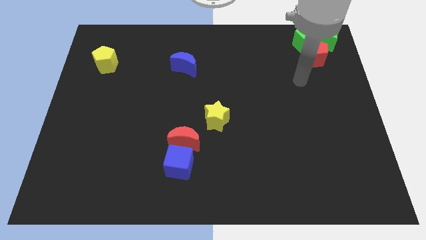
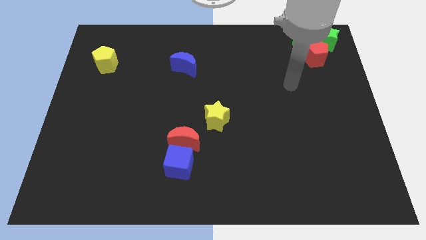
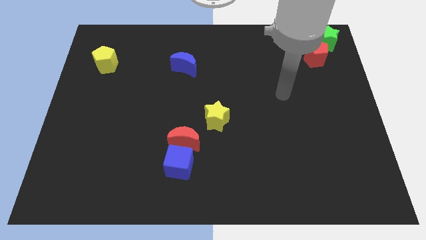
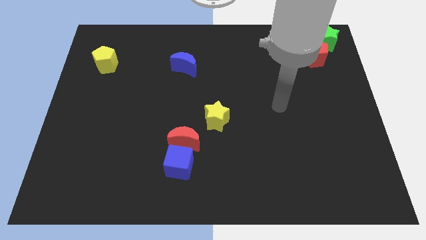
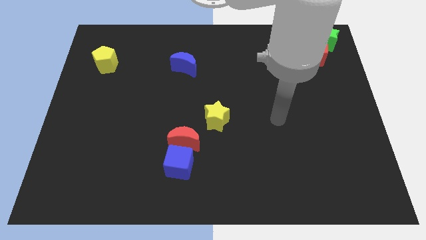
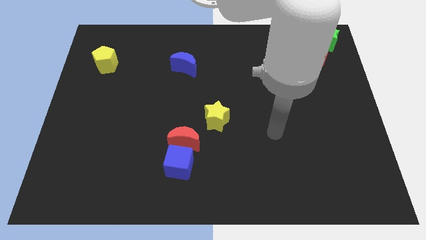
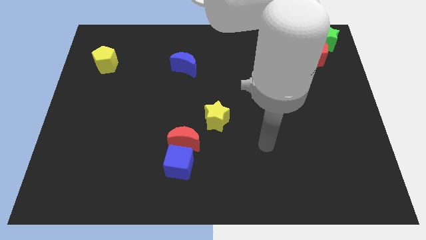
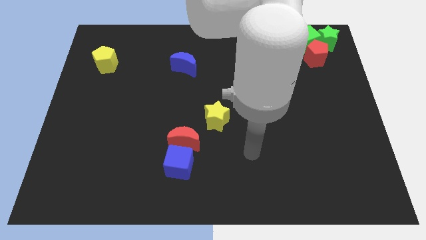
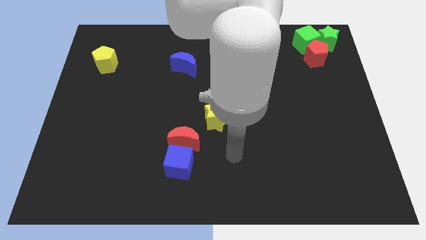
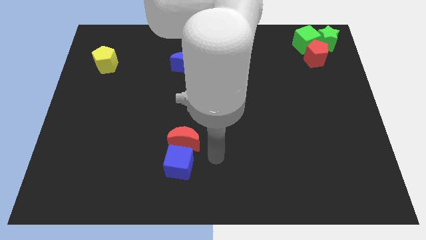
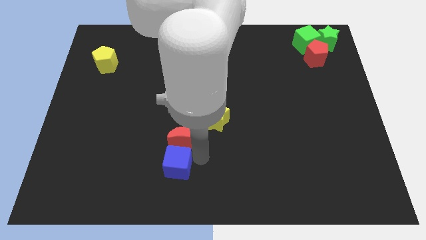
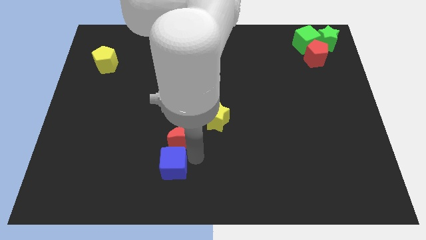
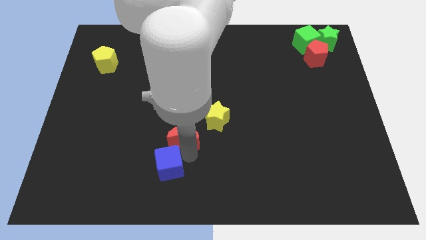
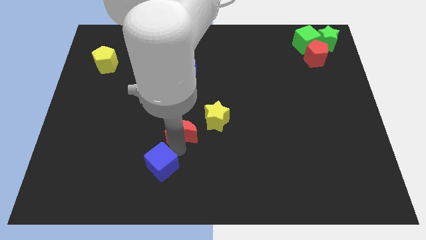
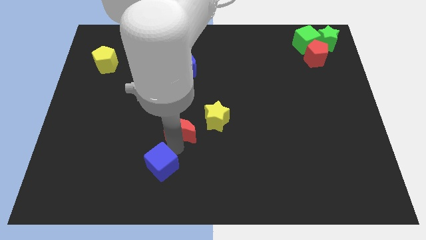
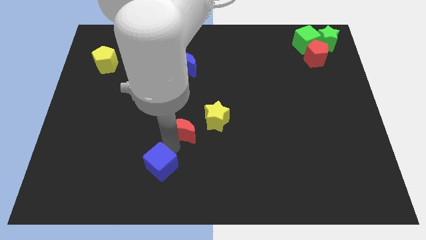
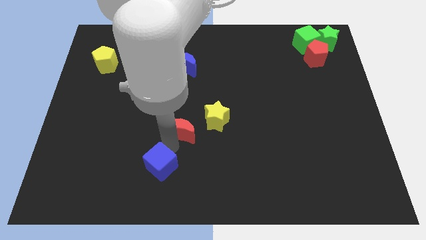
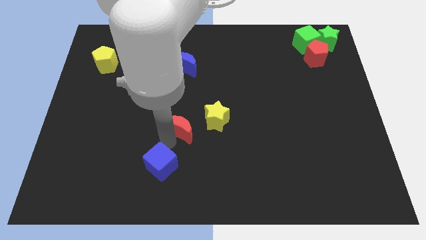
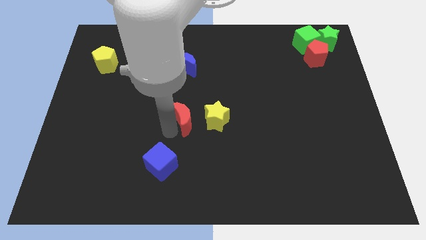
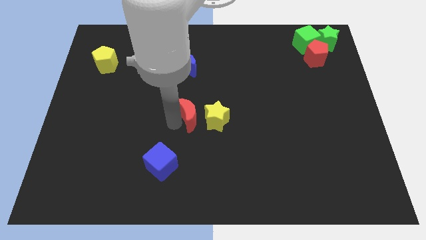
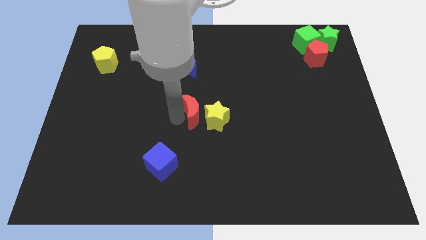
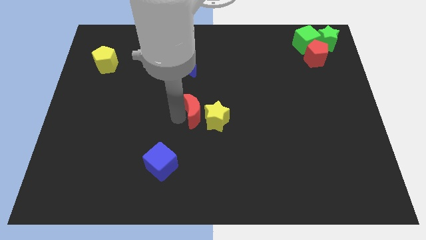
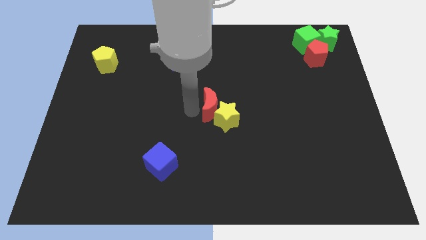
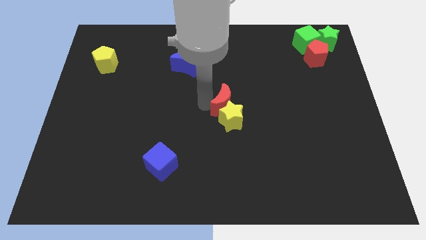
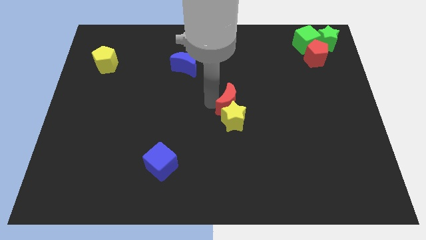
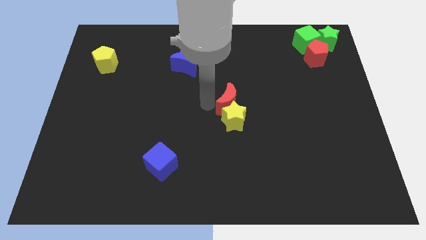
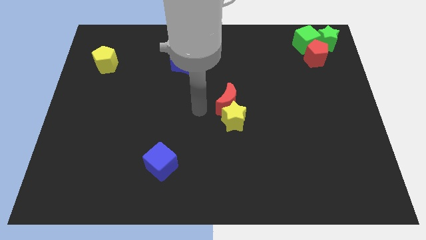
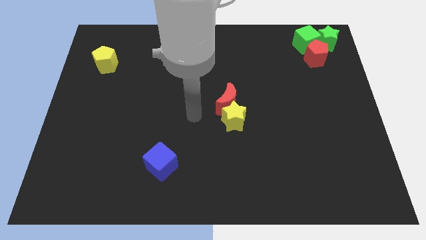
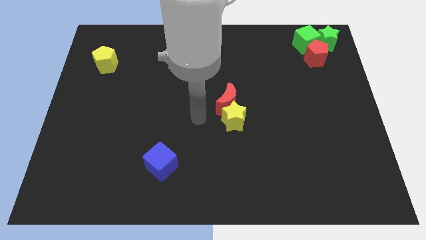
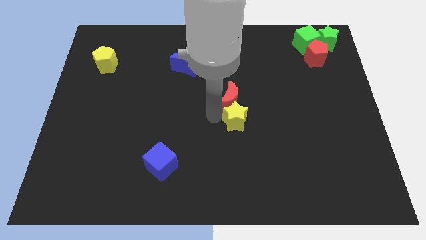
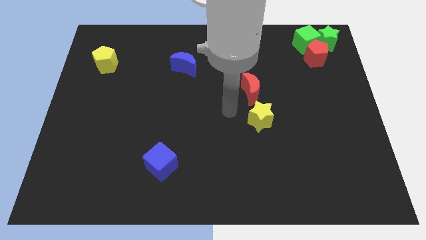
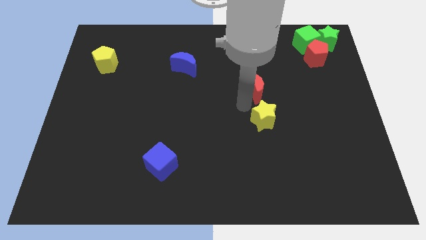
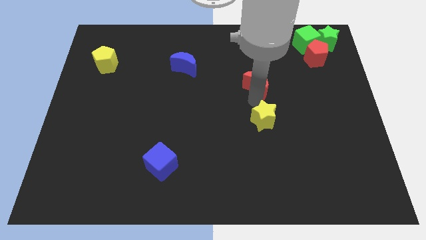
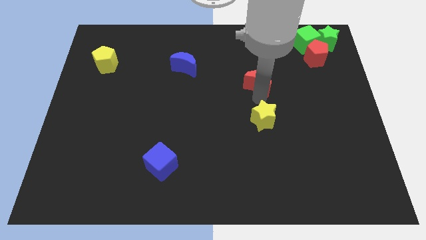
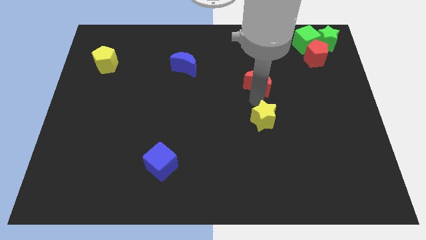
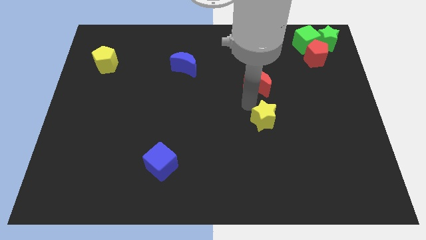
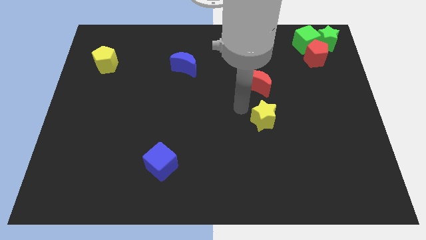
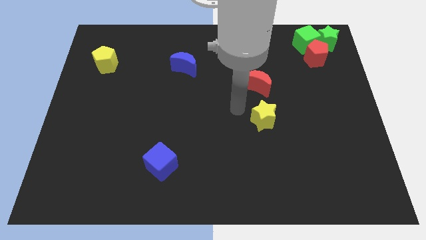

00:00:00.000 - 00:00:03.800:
place the red moon to the top of the yellow star

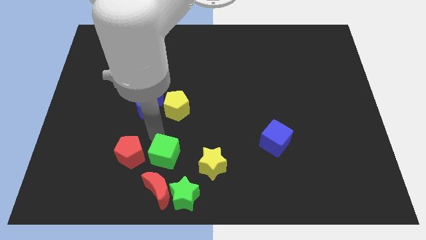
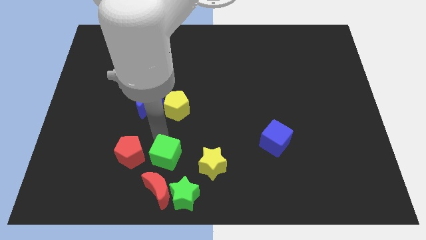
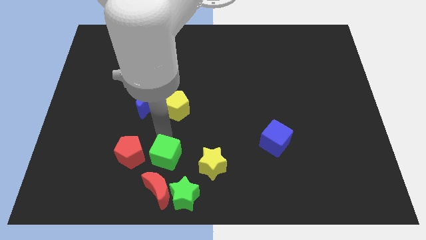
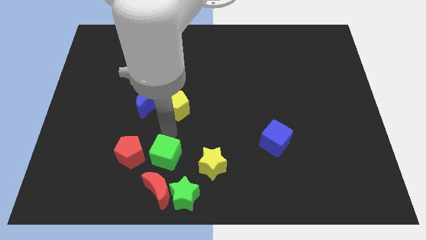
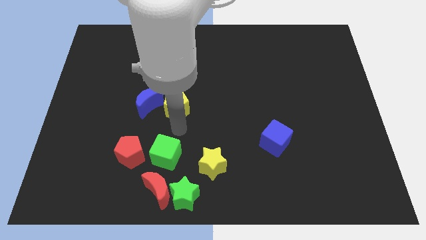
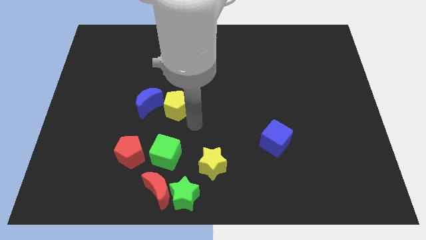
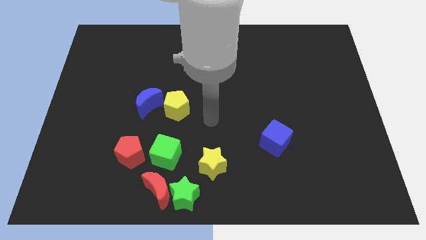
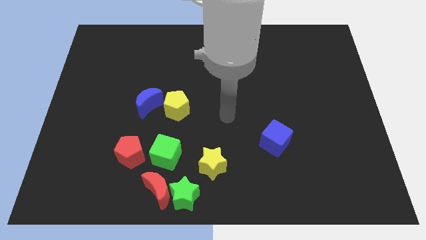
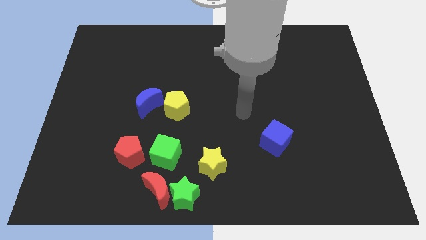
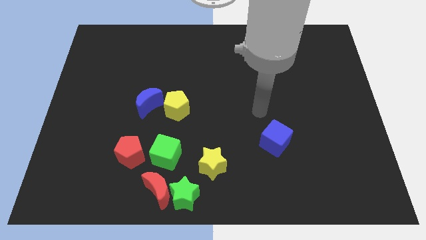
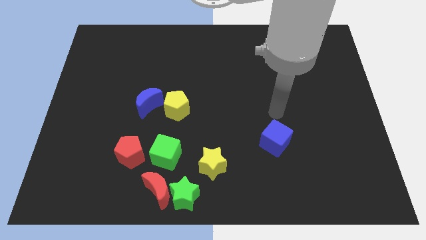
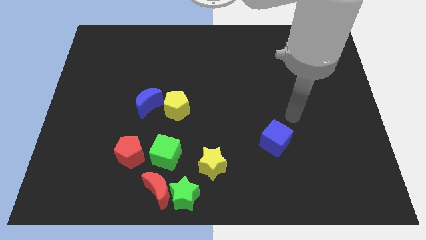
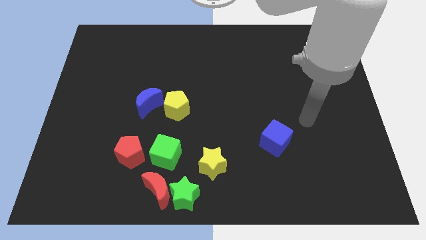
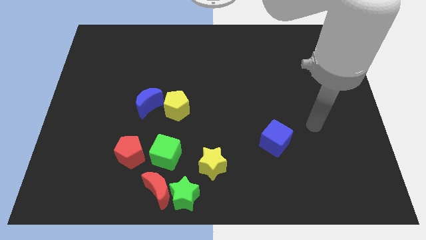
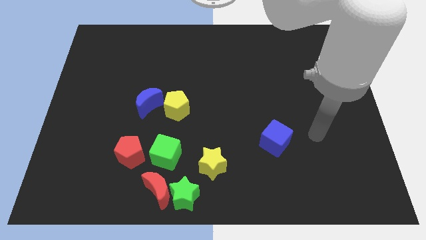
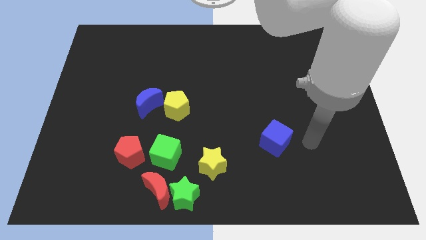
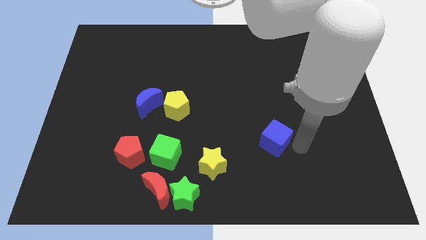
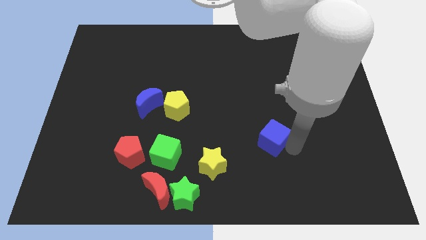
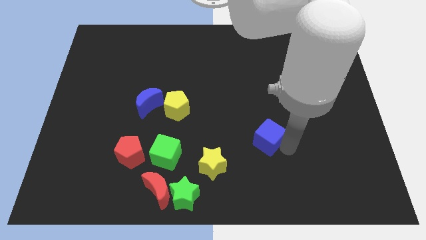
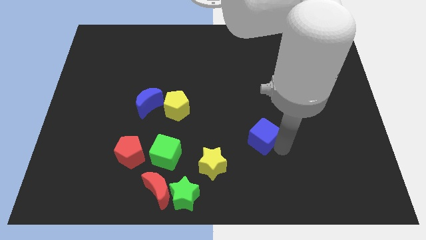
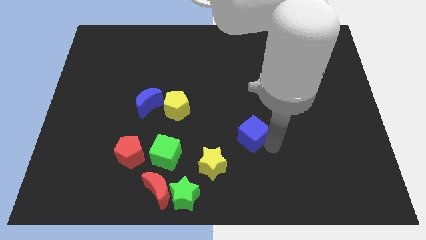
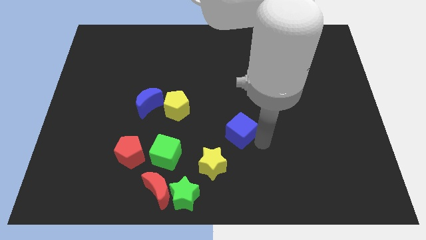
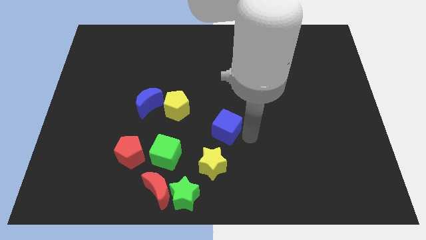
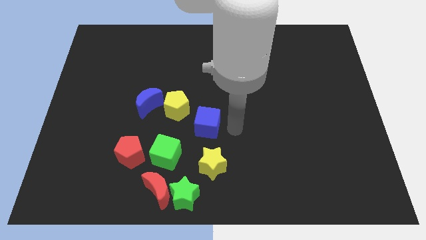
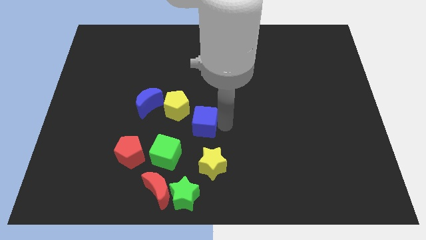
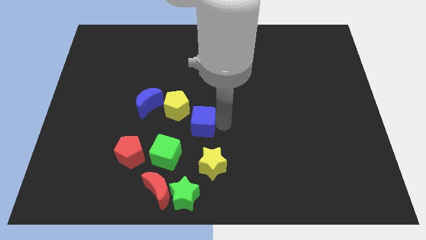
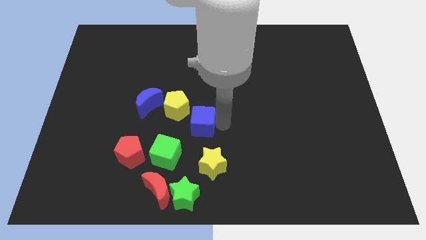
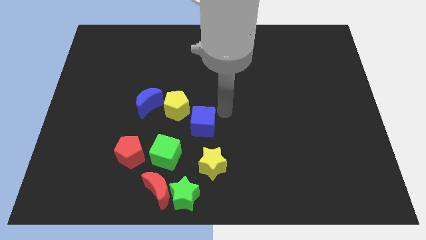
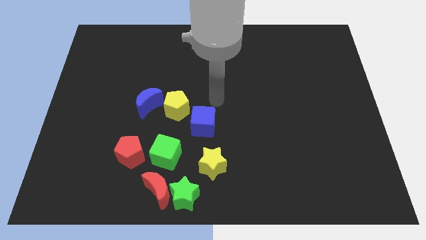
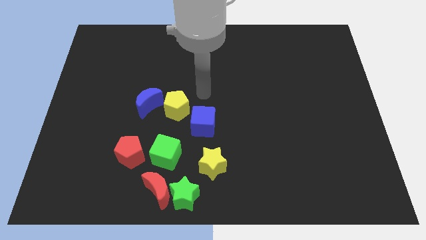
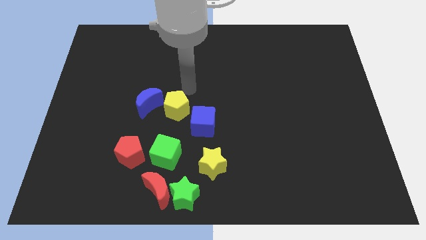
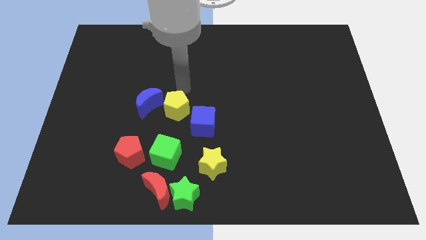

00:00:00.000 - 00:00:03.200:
place blue cube to the top right of green cube diagonally

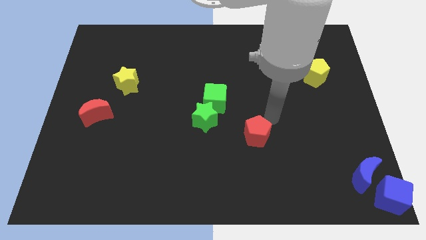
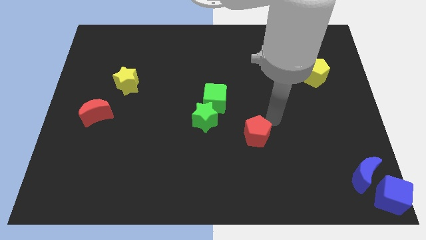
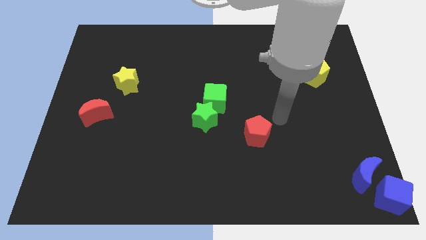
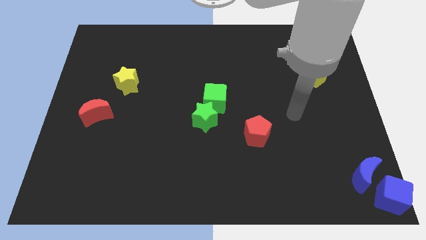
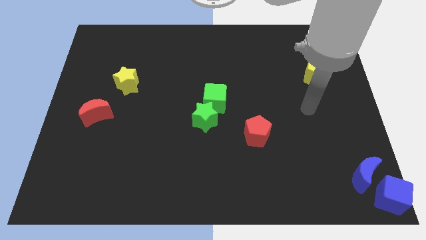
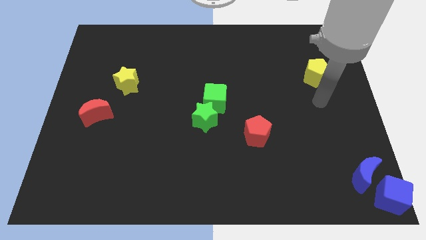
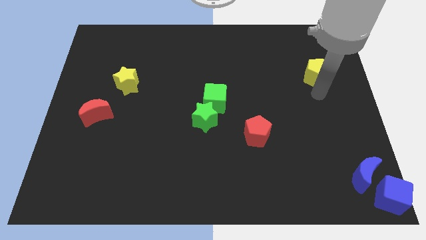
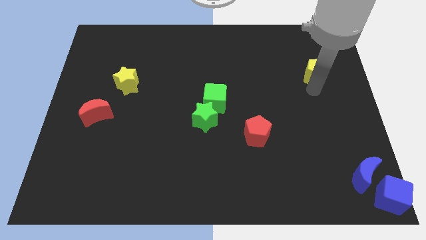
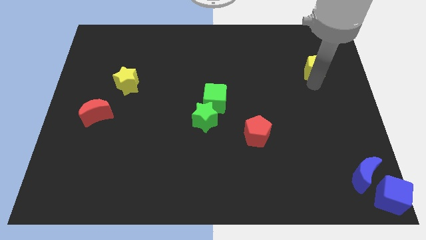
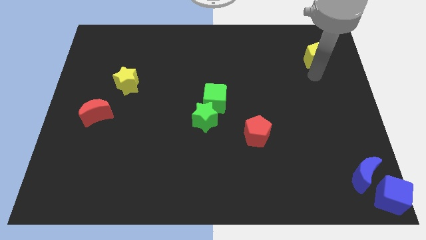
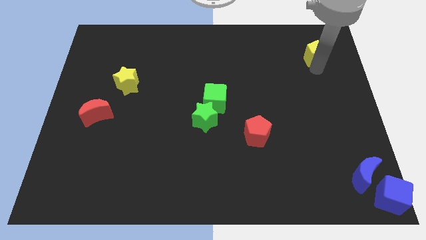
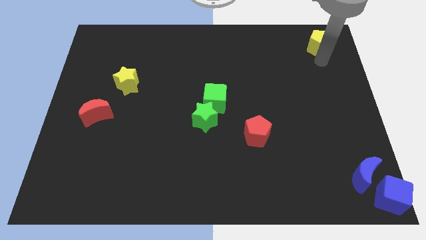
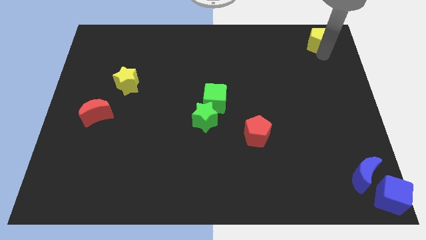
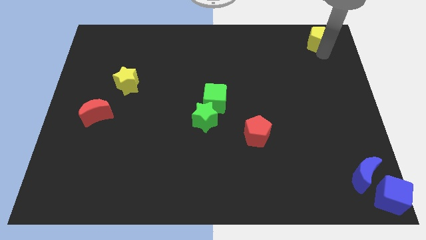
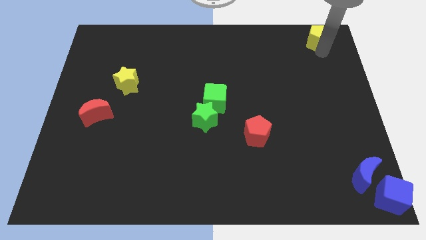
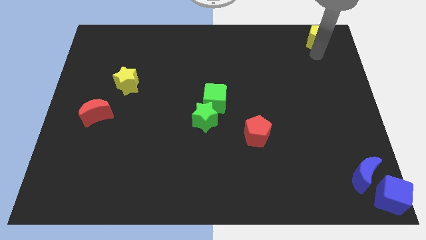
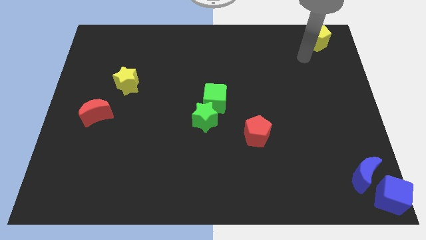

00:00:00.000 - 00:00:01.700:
move yellow pentagon to the top right corner of the board

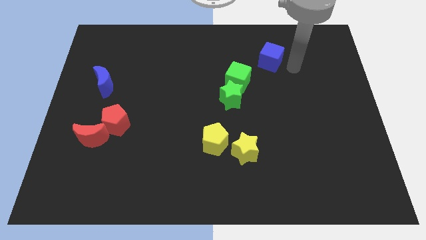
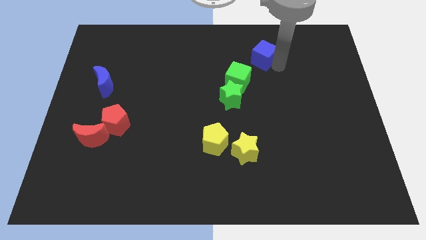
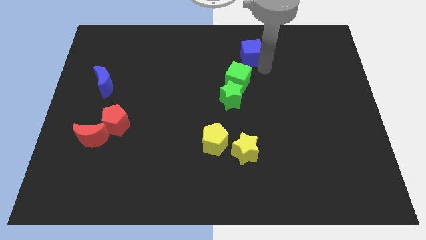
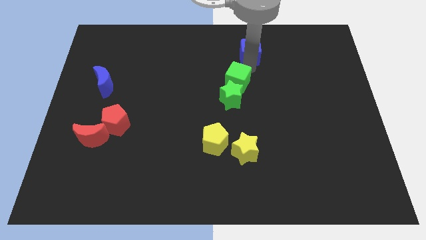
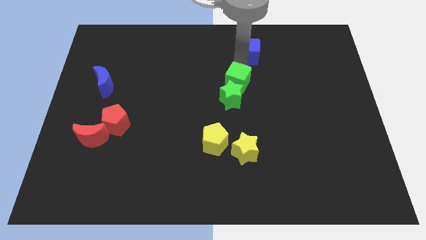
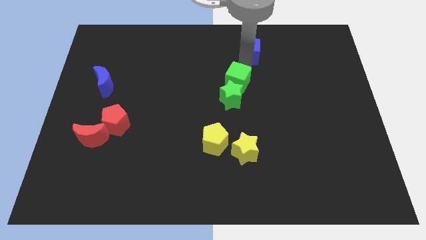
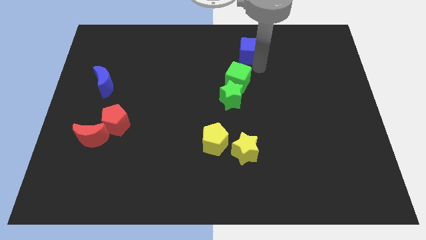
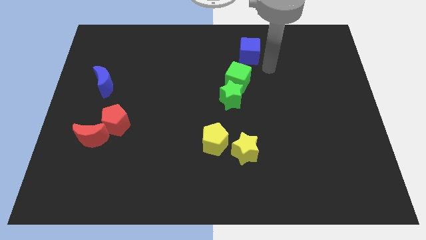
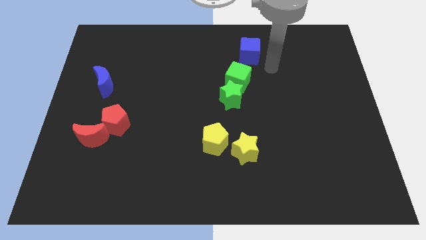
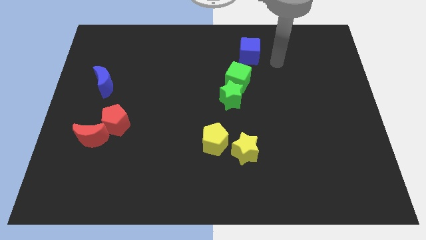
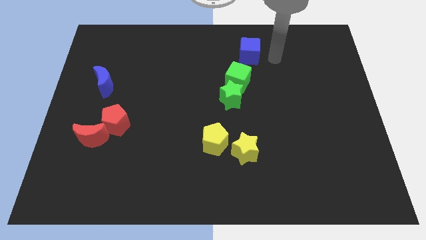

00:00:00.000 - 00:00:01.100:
push the blue cube towards the top center of the board
